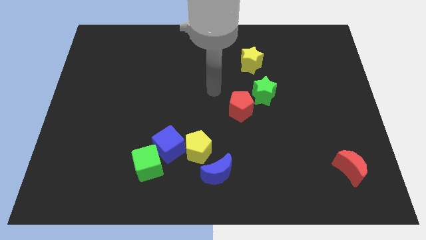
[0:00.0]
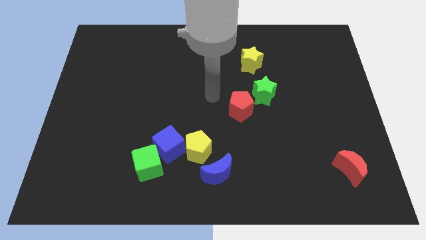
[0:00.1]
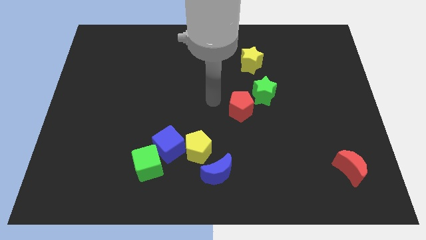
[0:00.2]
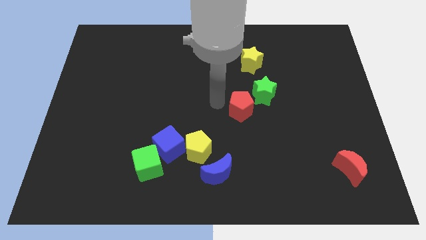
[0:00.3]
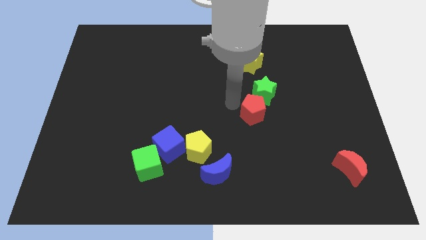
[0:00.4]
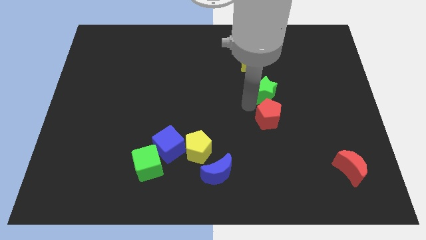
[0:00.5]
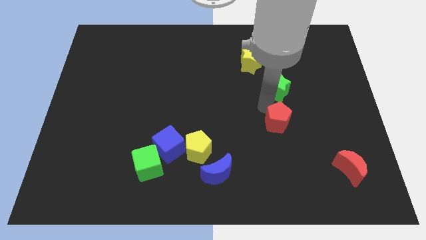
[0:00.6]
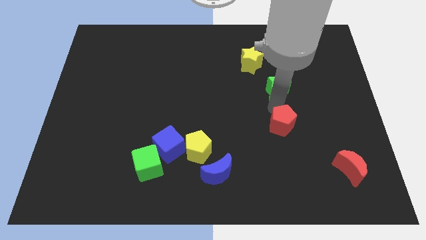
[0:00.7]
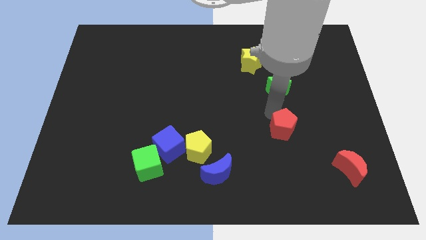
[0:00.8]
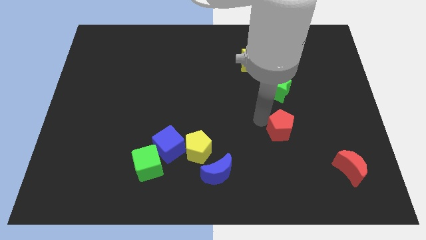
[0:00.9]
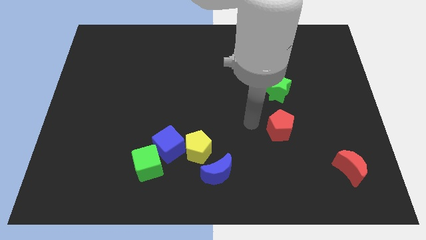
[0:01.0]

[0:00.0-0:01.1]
move red pentagon below the green star

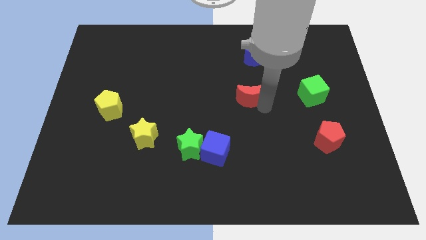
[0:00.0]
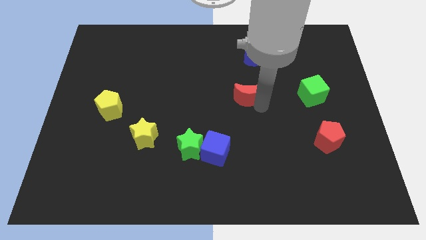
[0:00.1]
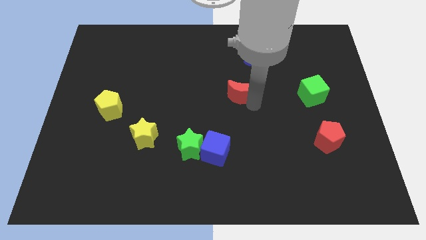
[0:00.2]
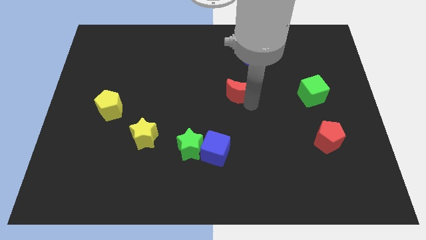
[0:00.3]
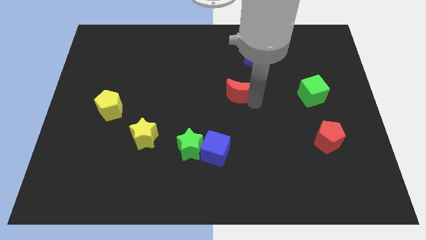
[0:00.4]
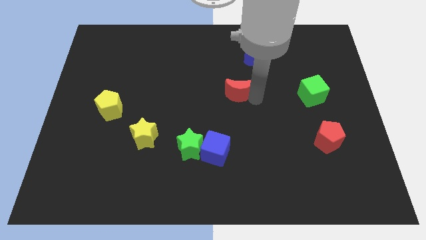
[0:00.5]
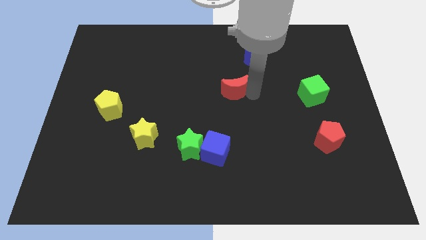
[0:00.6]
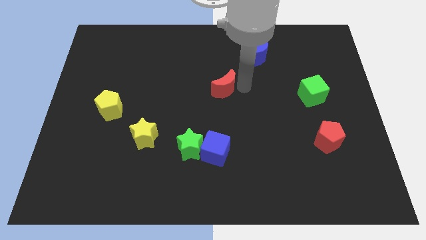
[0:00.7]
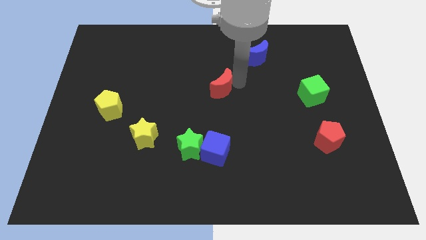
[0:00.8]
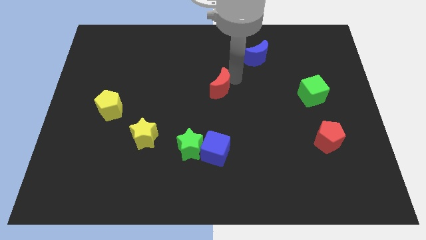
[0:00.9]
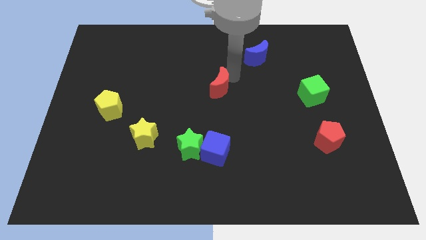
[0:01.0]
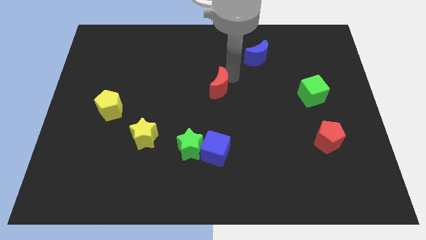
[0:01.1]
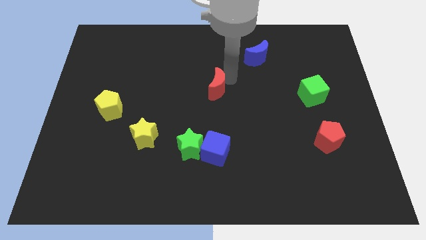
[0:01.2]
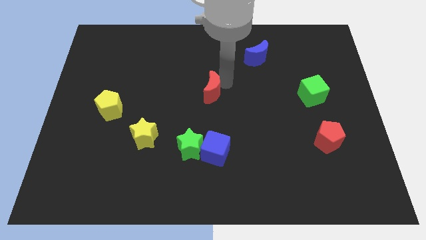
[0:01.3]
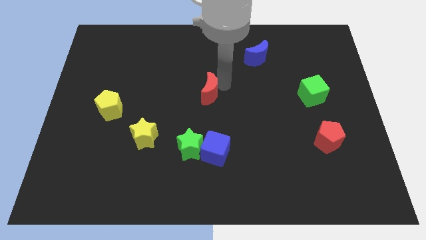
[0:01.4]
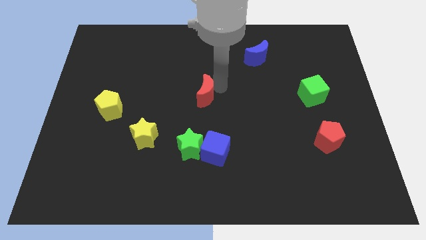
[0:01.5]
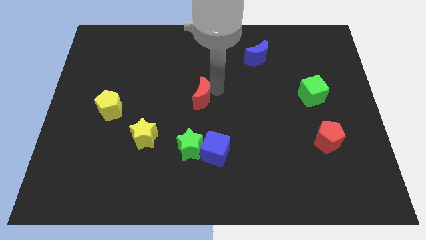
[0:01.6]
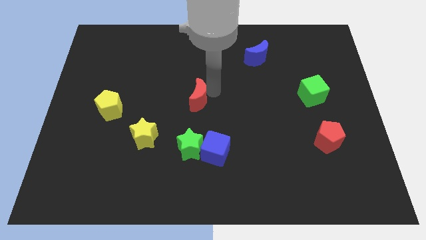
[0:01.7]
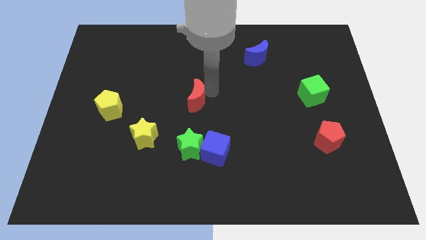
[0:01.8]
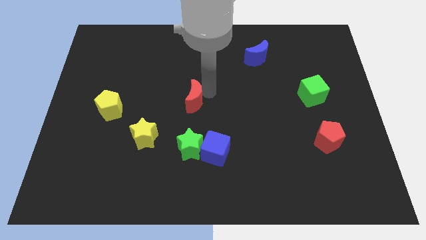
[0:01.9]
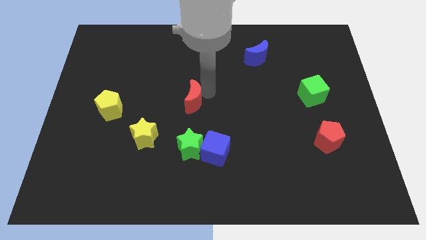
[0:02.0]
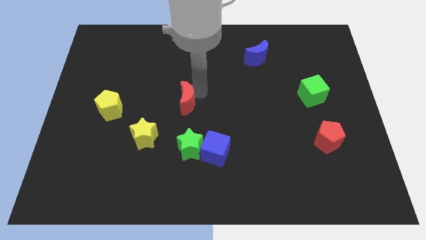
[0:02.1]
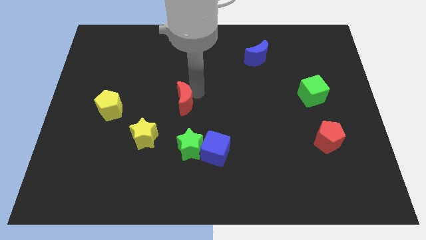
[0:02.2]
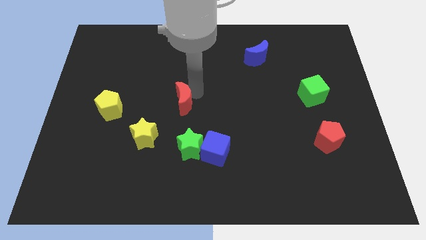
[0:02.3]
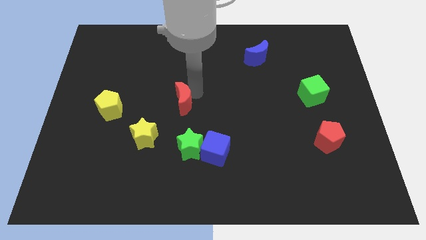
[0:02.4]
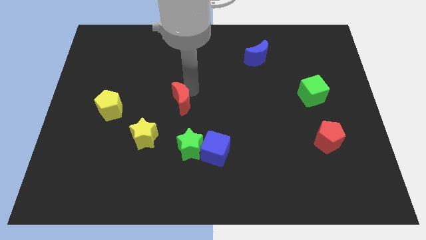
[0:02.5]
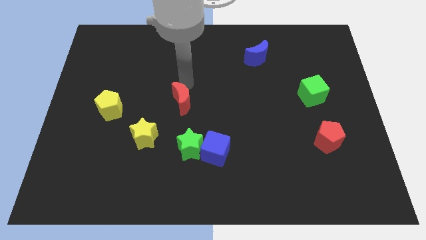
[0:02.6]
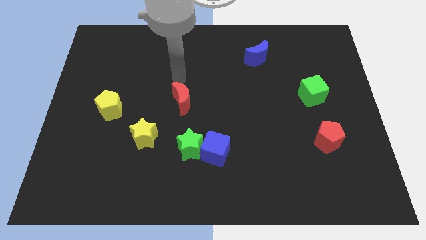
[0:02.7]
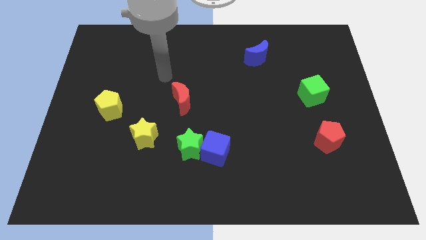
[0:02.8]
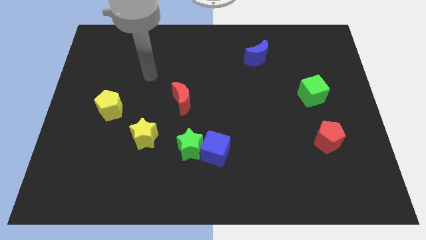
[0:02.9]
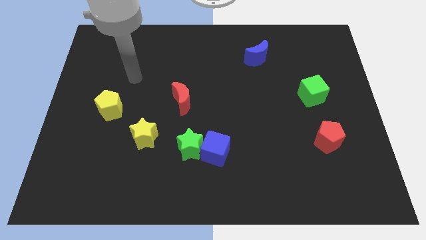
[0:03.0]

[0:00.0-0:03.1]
slide red moon above the green star

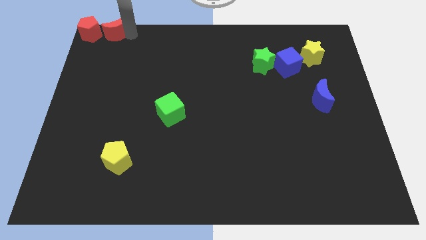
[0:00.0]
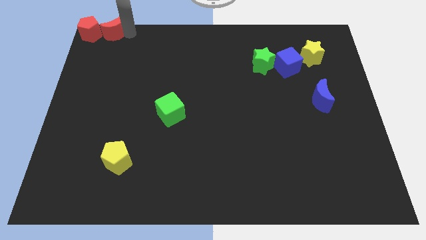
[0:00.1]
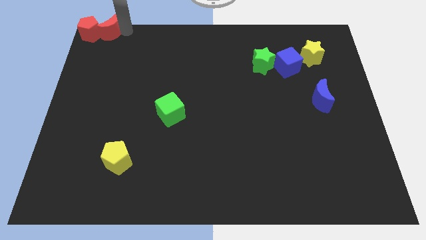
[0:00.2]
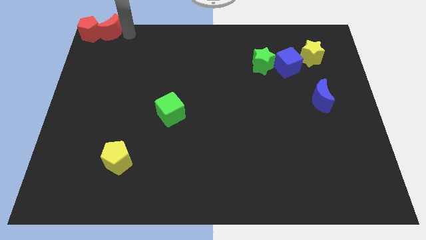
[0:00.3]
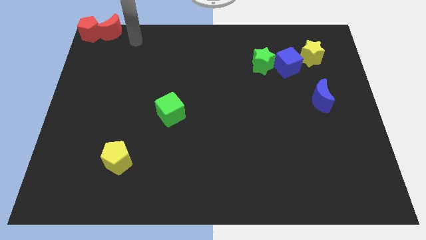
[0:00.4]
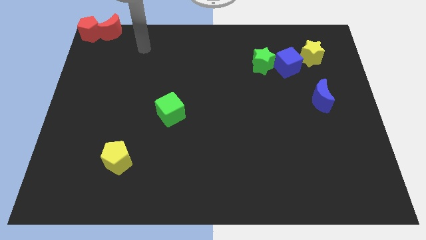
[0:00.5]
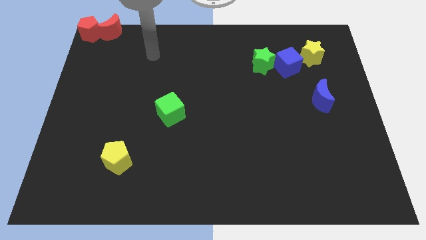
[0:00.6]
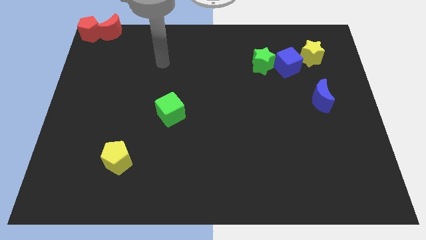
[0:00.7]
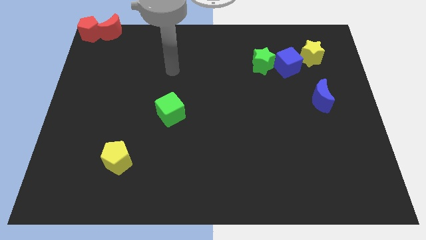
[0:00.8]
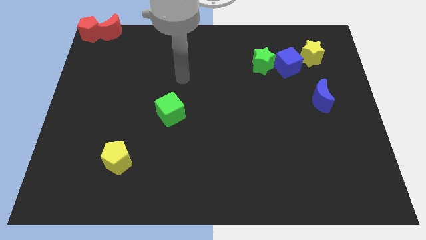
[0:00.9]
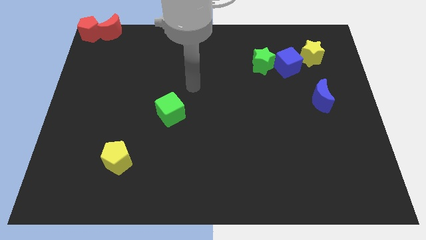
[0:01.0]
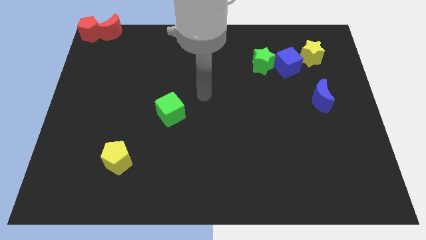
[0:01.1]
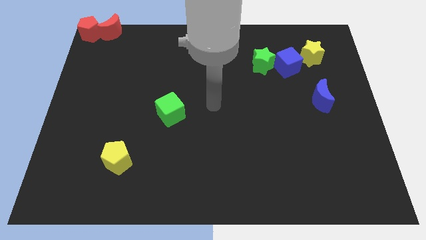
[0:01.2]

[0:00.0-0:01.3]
move red crescent into red pentagon

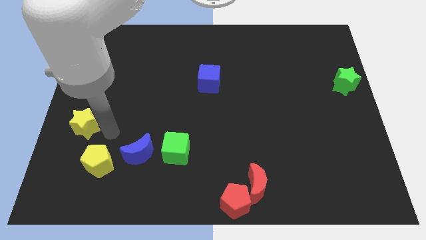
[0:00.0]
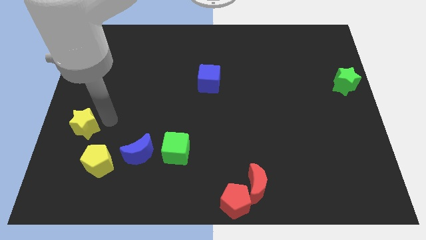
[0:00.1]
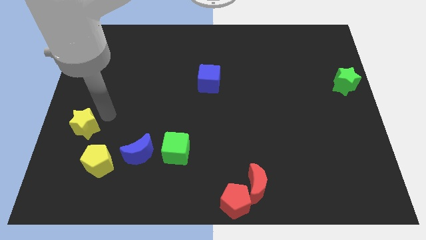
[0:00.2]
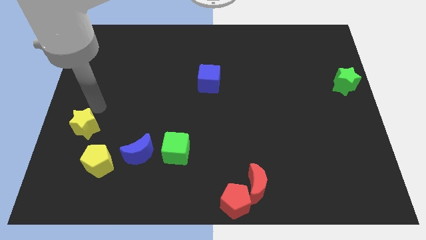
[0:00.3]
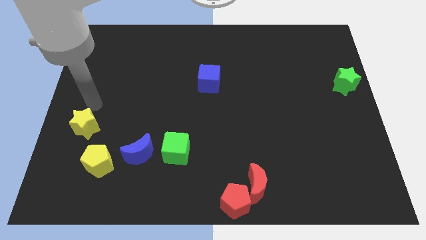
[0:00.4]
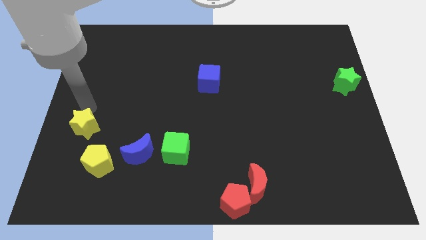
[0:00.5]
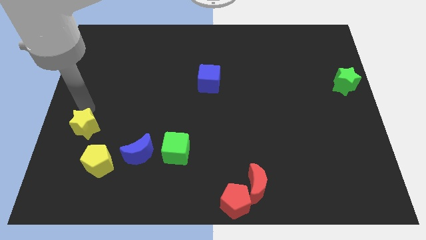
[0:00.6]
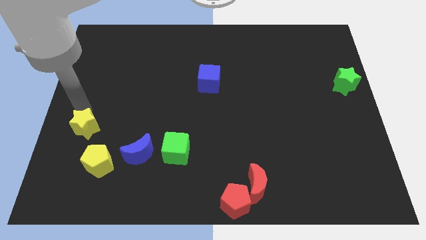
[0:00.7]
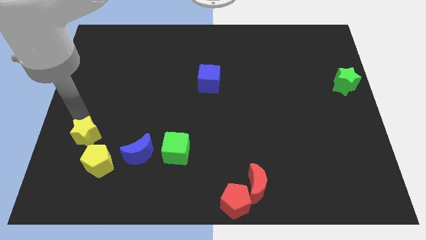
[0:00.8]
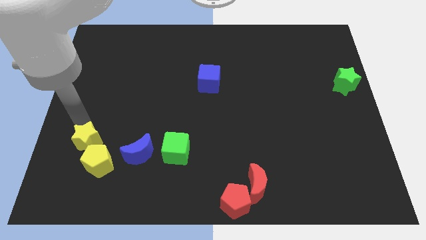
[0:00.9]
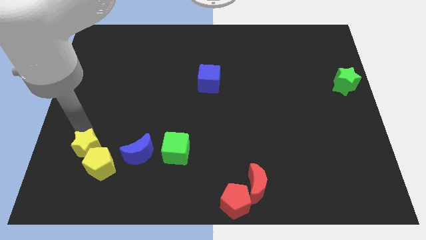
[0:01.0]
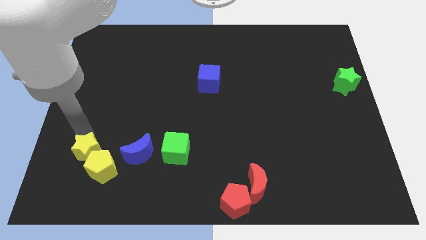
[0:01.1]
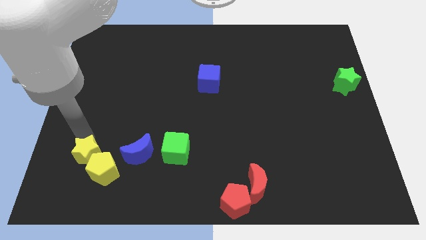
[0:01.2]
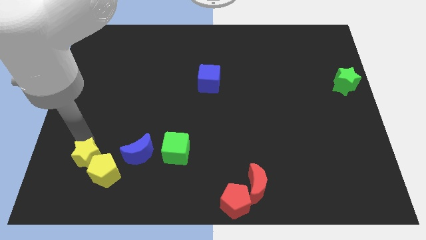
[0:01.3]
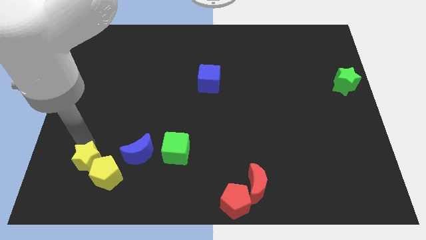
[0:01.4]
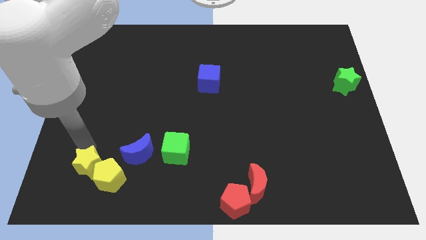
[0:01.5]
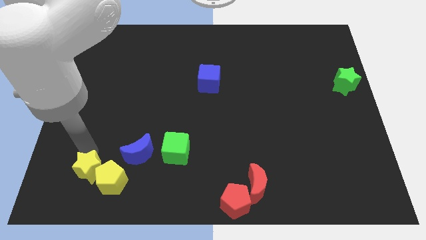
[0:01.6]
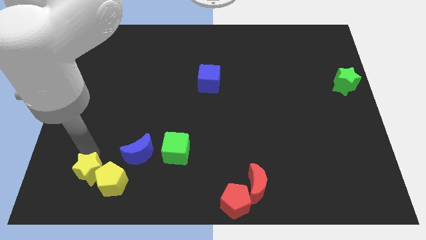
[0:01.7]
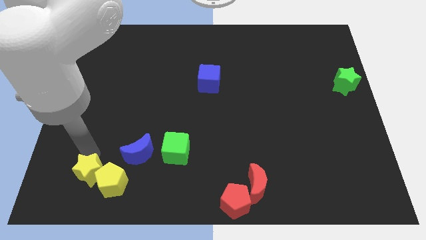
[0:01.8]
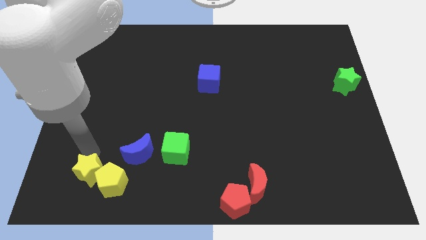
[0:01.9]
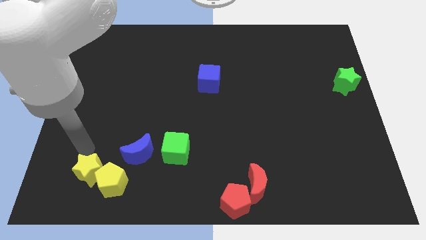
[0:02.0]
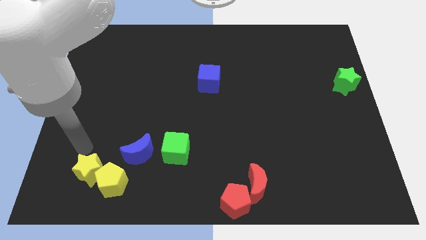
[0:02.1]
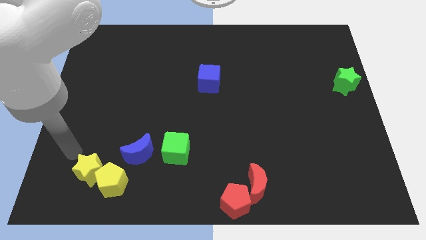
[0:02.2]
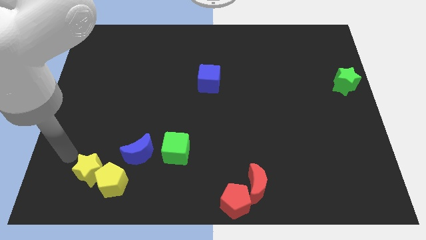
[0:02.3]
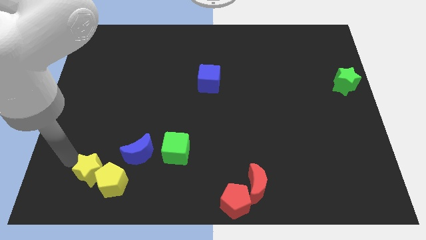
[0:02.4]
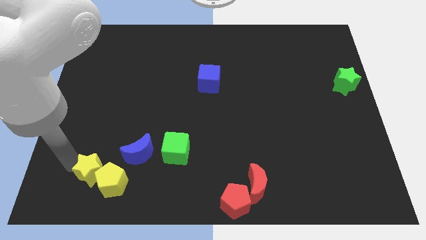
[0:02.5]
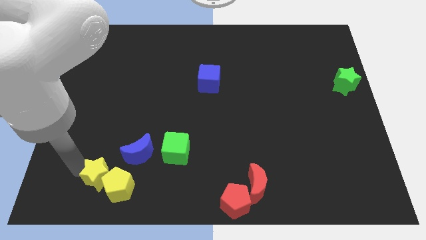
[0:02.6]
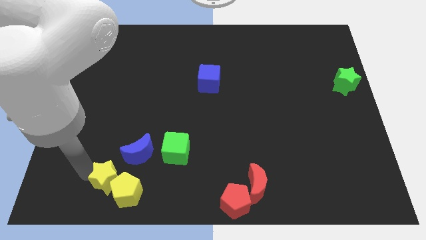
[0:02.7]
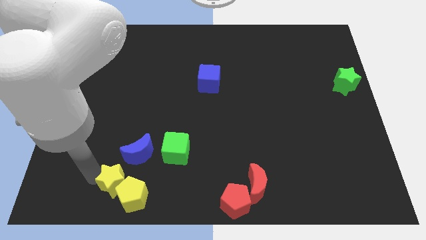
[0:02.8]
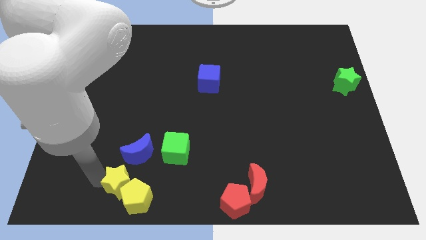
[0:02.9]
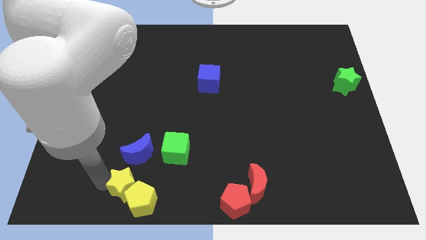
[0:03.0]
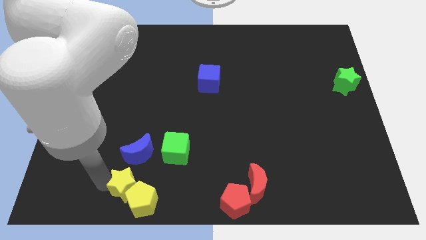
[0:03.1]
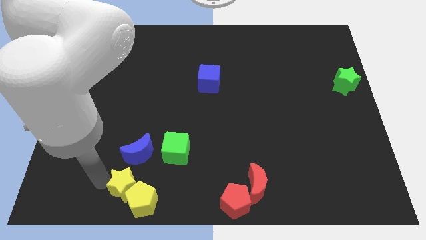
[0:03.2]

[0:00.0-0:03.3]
place the yellow blocks below the blue moon

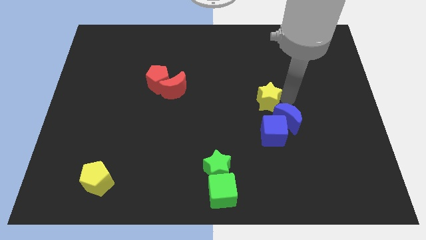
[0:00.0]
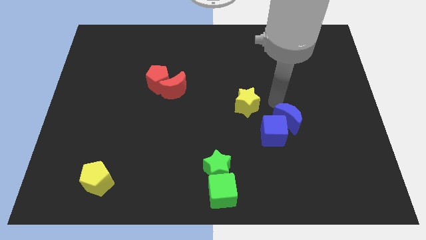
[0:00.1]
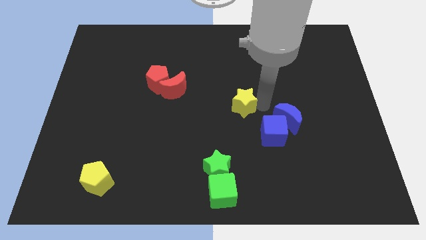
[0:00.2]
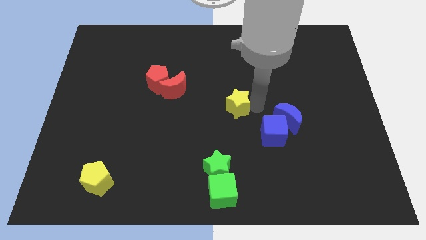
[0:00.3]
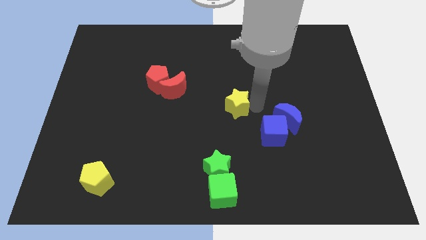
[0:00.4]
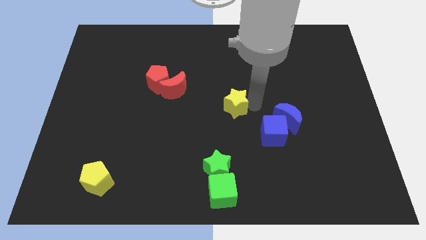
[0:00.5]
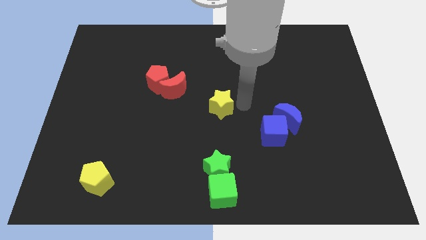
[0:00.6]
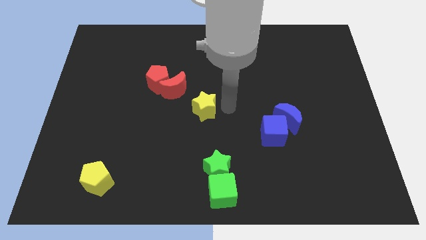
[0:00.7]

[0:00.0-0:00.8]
move the yellow star vertically above to the green star
